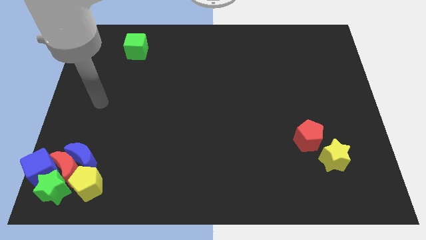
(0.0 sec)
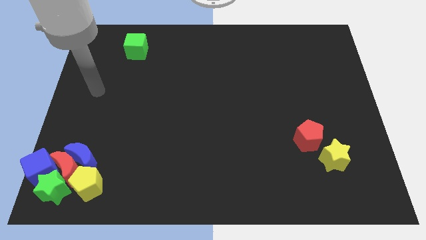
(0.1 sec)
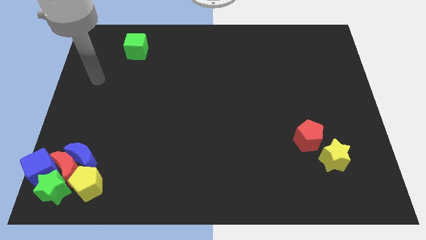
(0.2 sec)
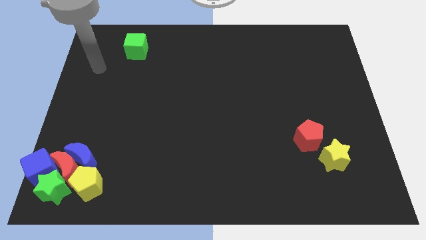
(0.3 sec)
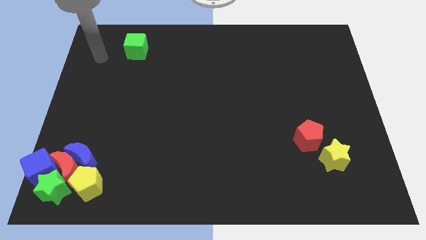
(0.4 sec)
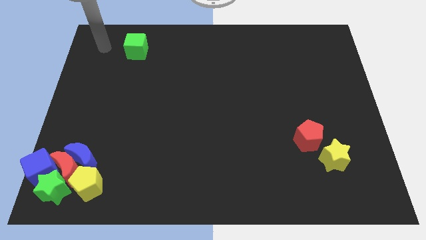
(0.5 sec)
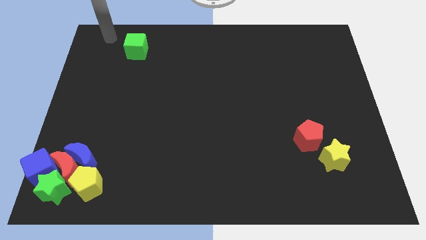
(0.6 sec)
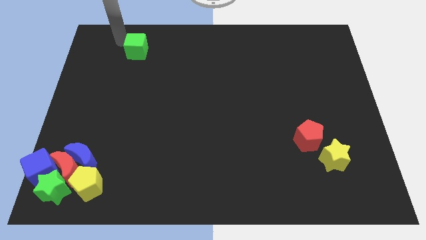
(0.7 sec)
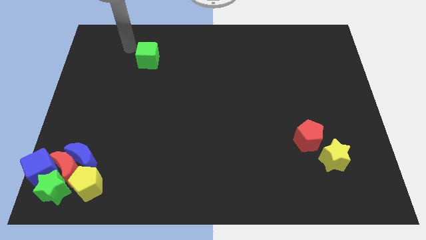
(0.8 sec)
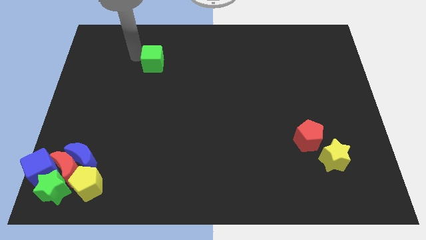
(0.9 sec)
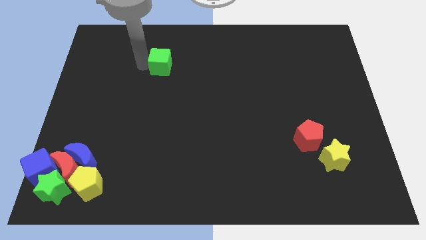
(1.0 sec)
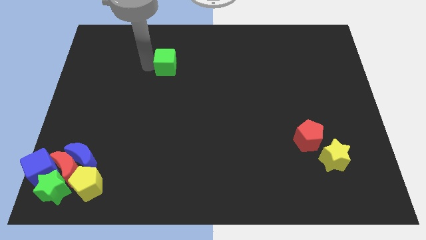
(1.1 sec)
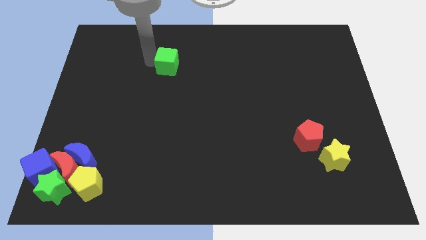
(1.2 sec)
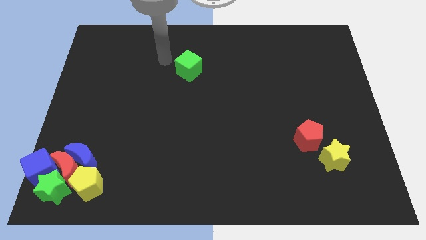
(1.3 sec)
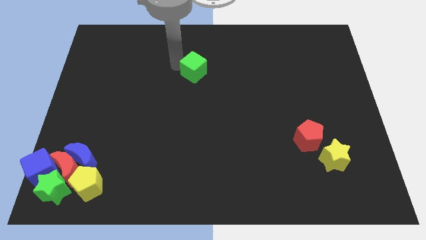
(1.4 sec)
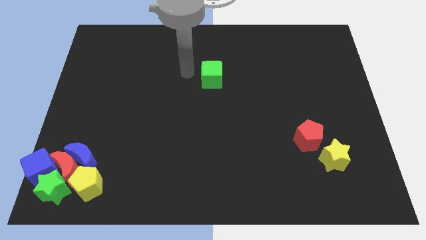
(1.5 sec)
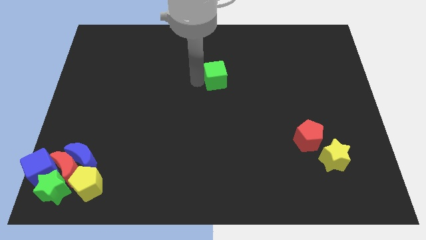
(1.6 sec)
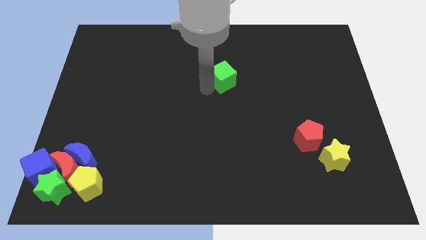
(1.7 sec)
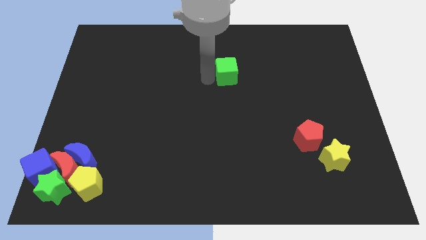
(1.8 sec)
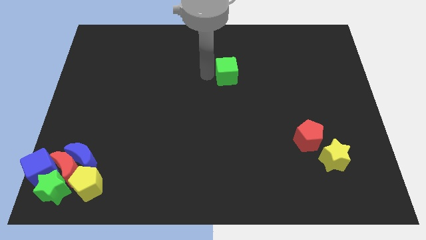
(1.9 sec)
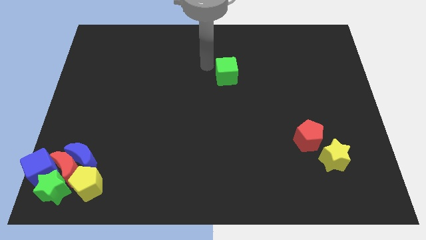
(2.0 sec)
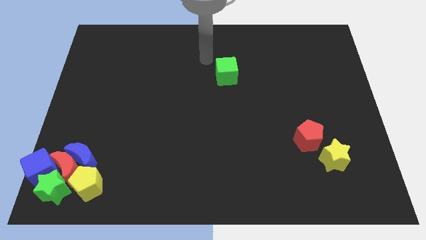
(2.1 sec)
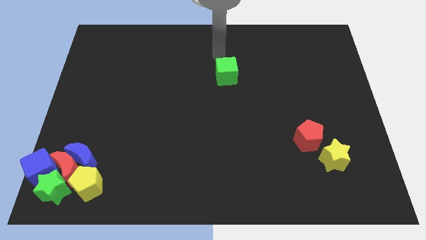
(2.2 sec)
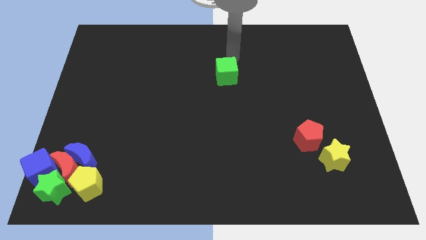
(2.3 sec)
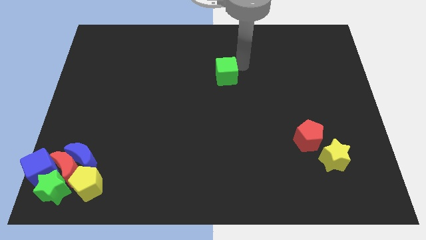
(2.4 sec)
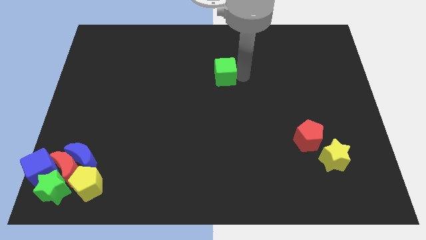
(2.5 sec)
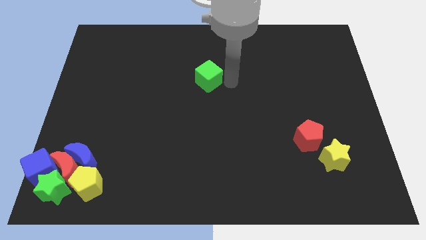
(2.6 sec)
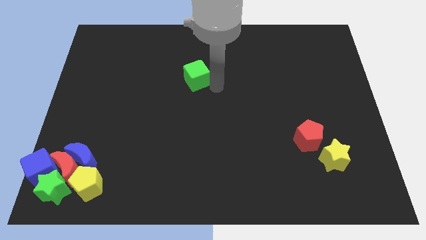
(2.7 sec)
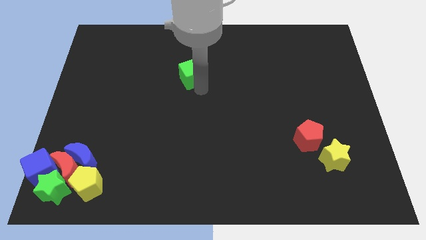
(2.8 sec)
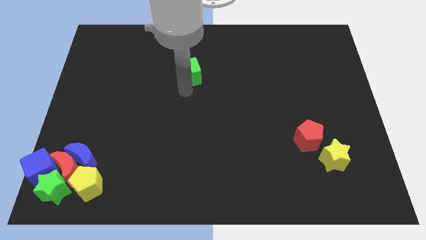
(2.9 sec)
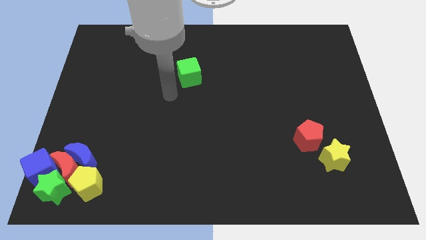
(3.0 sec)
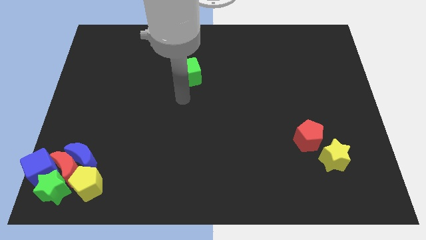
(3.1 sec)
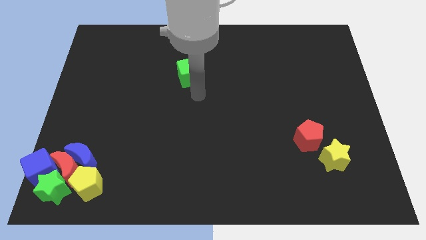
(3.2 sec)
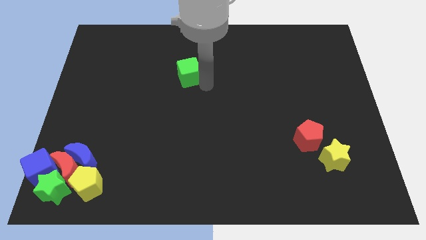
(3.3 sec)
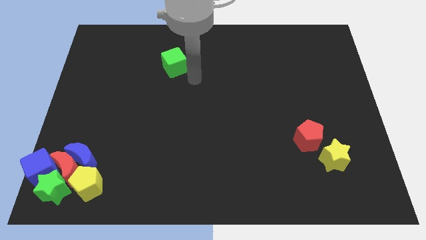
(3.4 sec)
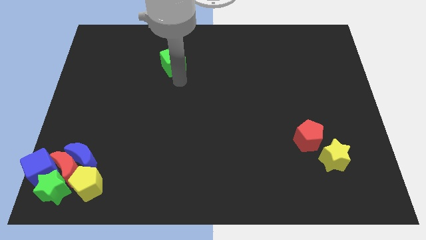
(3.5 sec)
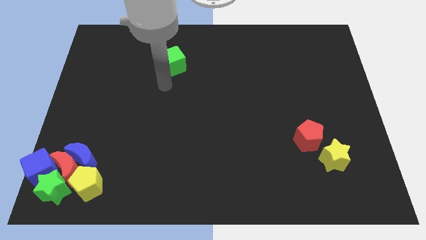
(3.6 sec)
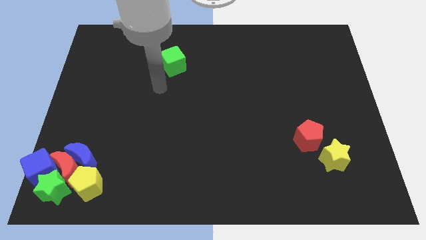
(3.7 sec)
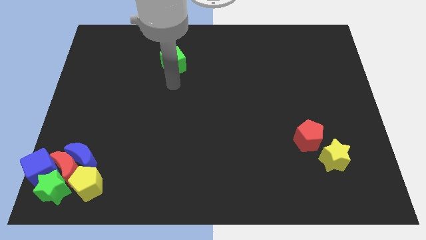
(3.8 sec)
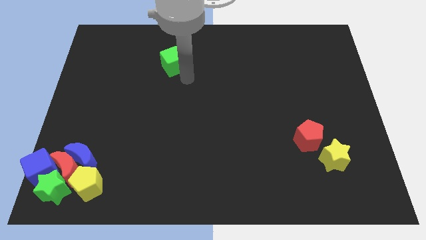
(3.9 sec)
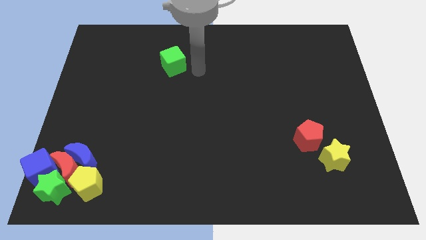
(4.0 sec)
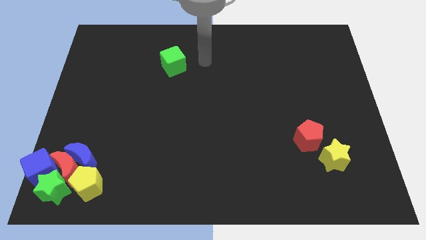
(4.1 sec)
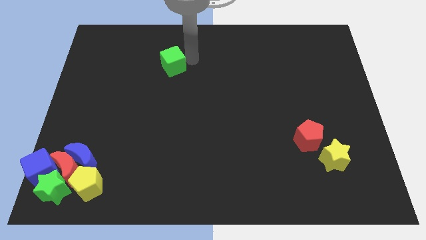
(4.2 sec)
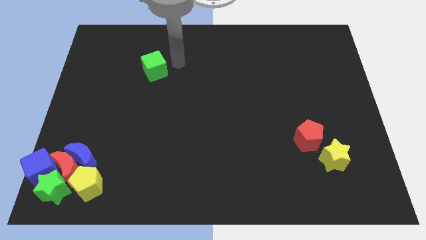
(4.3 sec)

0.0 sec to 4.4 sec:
push the green cube diagonal to the top right side of the blue crescent

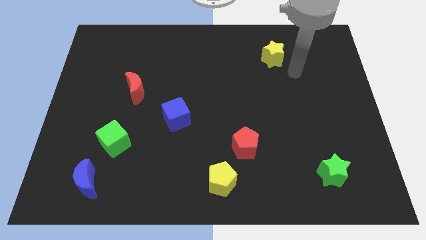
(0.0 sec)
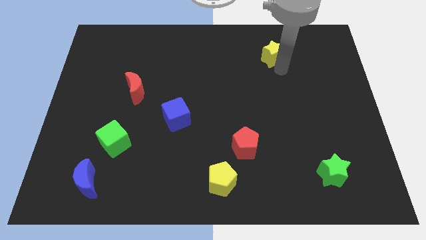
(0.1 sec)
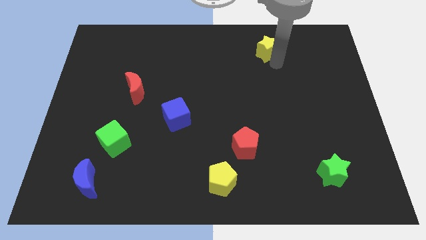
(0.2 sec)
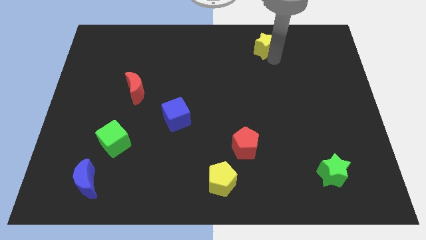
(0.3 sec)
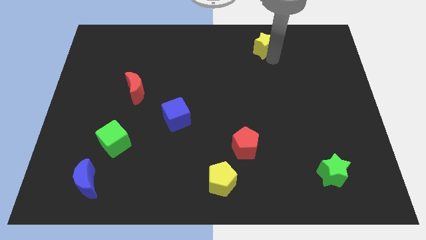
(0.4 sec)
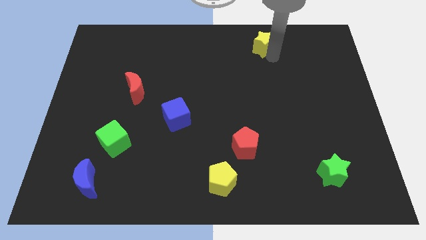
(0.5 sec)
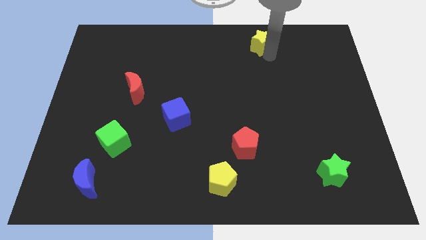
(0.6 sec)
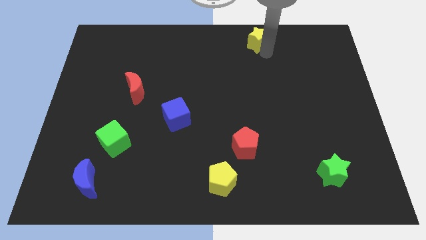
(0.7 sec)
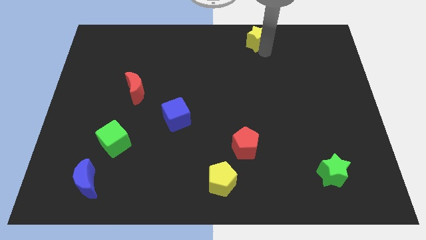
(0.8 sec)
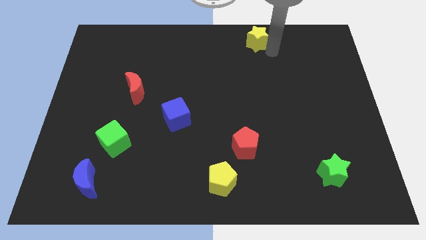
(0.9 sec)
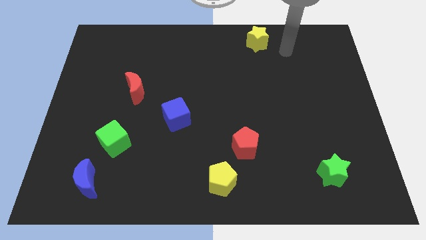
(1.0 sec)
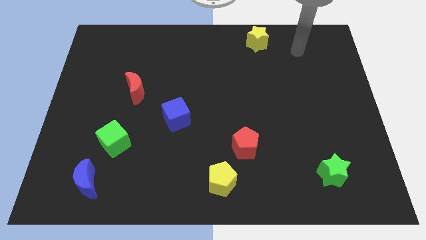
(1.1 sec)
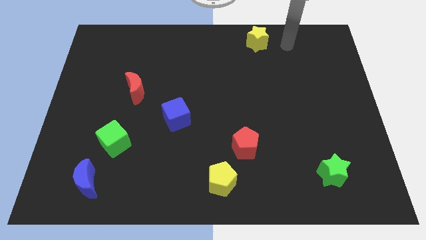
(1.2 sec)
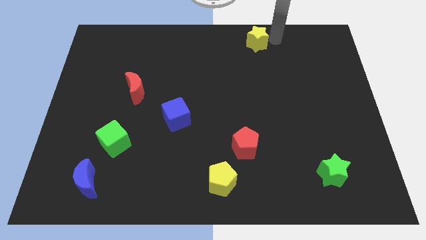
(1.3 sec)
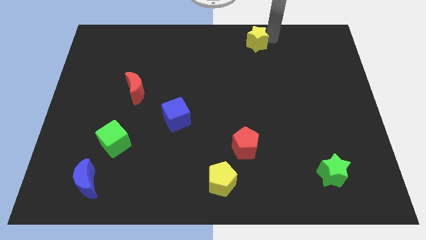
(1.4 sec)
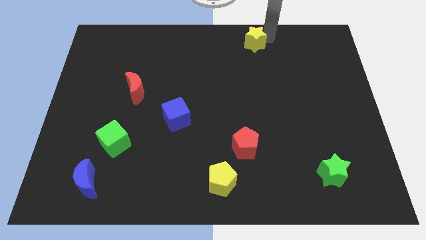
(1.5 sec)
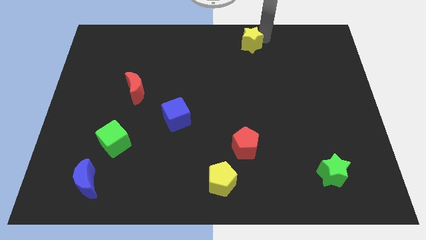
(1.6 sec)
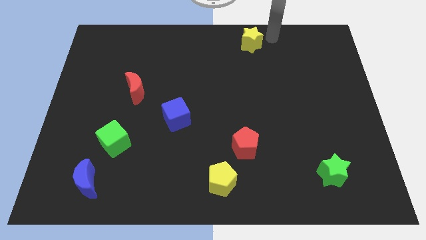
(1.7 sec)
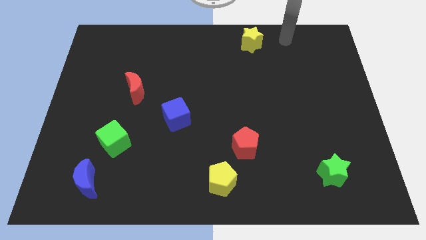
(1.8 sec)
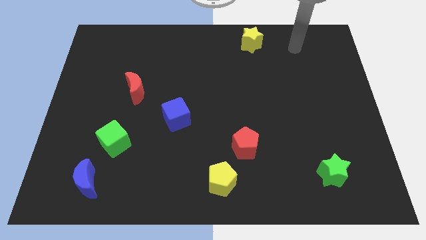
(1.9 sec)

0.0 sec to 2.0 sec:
push the yellow star above the red pentagon

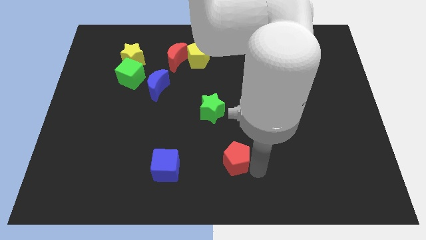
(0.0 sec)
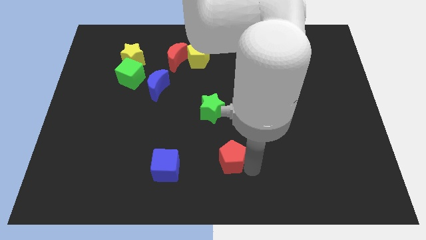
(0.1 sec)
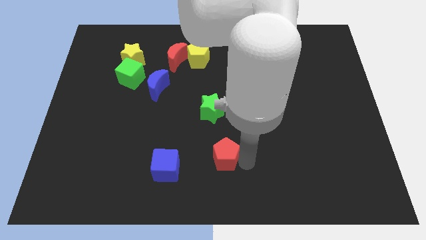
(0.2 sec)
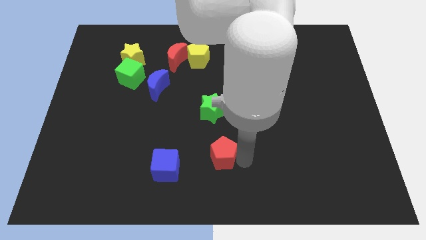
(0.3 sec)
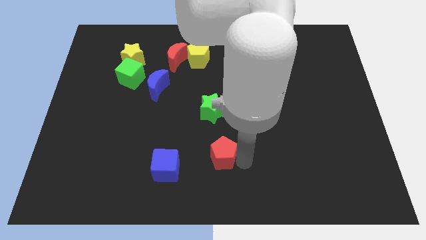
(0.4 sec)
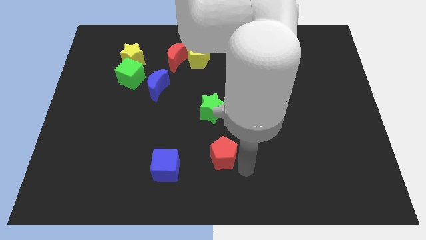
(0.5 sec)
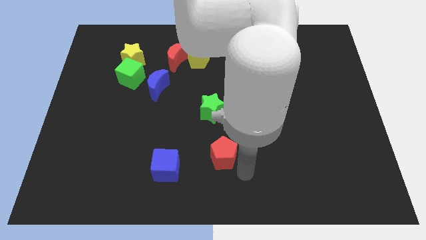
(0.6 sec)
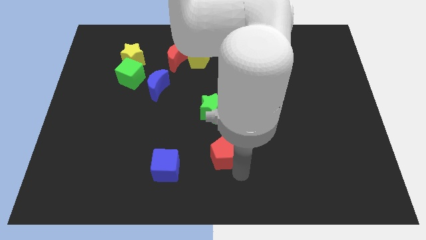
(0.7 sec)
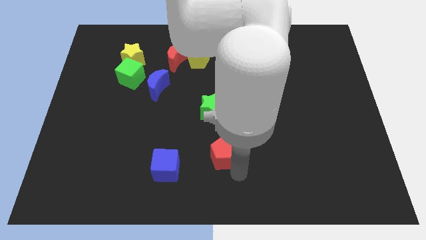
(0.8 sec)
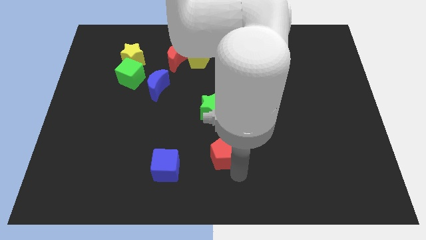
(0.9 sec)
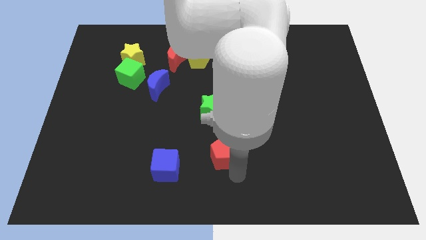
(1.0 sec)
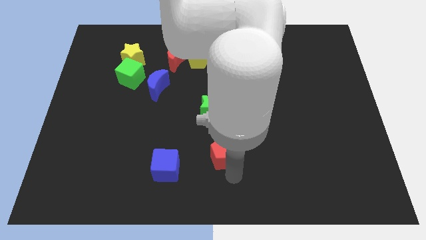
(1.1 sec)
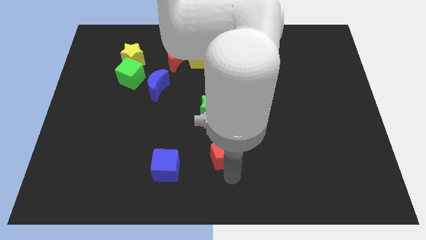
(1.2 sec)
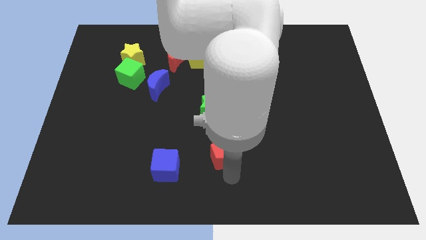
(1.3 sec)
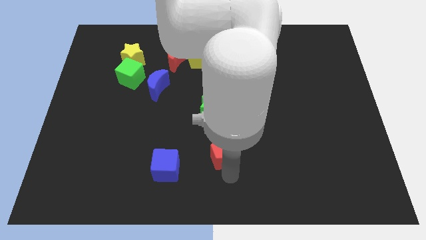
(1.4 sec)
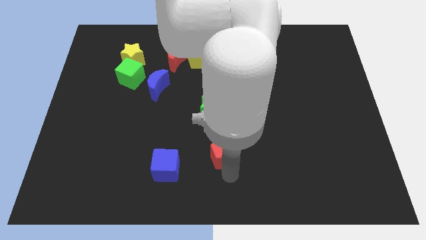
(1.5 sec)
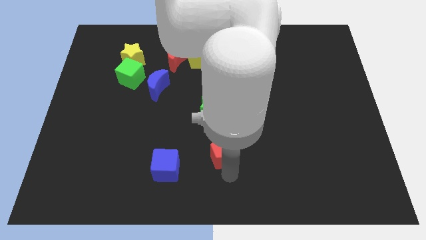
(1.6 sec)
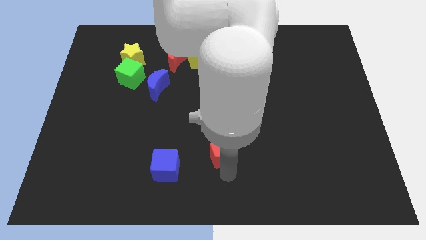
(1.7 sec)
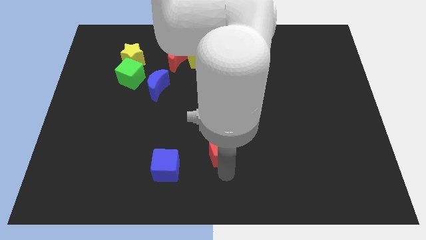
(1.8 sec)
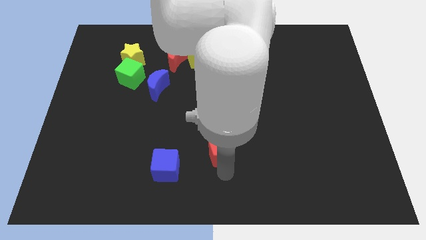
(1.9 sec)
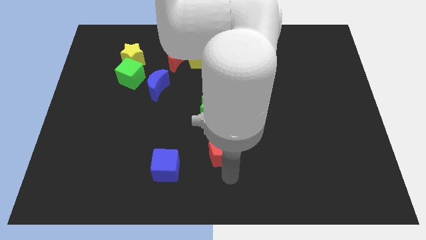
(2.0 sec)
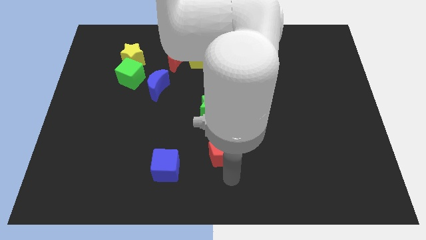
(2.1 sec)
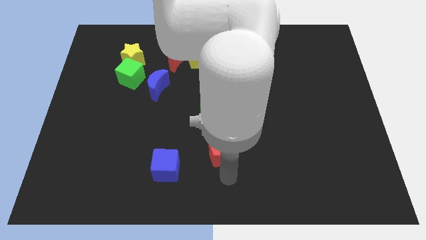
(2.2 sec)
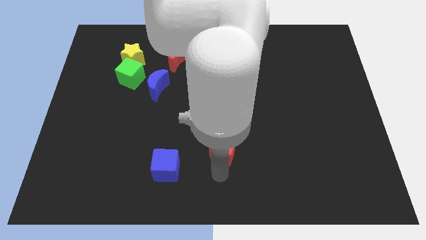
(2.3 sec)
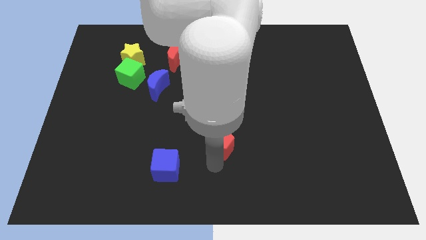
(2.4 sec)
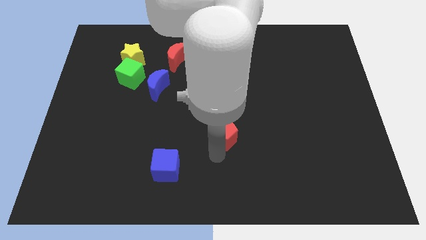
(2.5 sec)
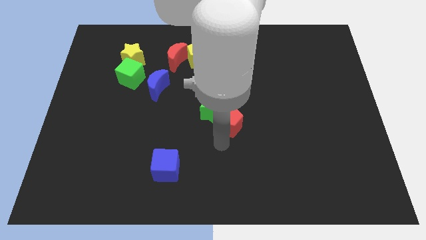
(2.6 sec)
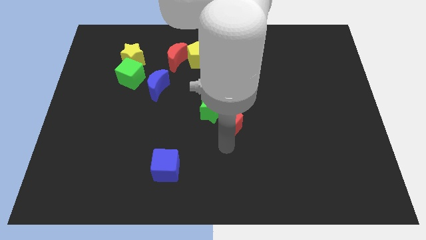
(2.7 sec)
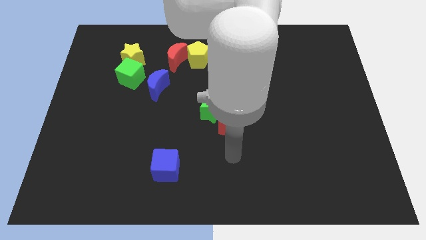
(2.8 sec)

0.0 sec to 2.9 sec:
move the red pentagon right below the green star
